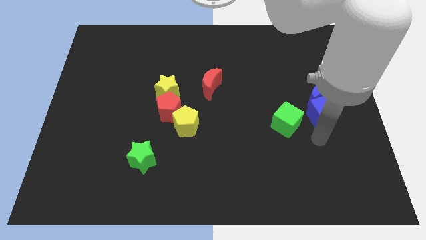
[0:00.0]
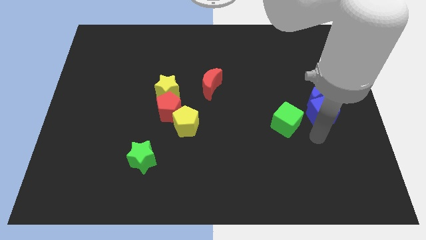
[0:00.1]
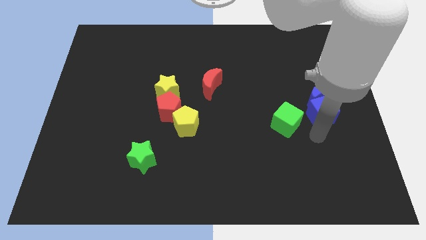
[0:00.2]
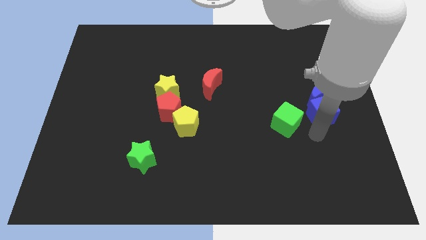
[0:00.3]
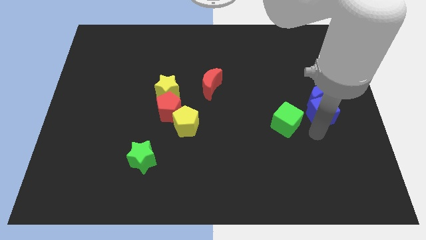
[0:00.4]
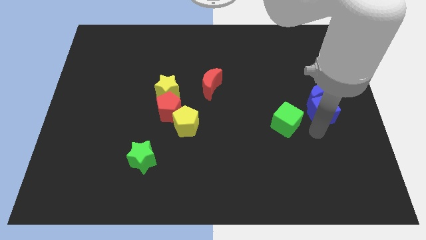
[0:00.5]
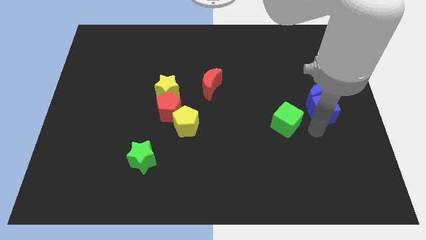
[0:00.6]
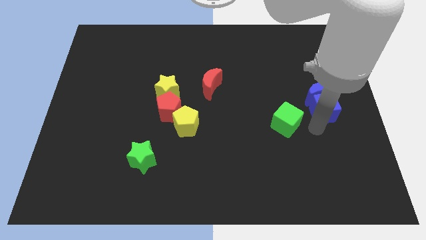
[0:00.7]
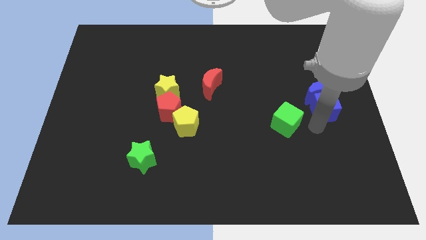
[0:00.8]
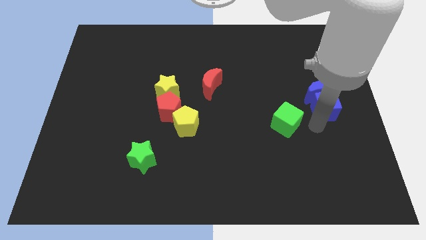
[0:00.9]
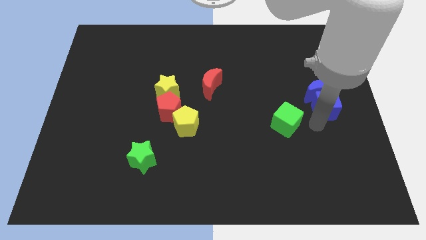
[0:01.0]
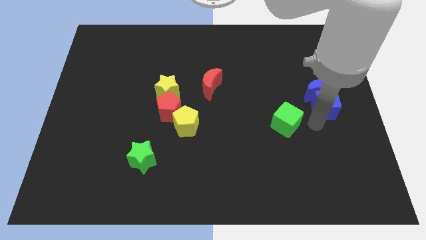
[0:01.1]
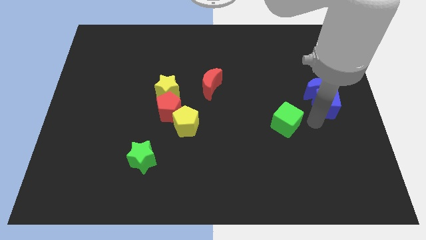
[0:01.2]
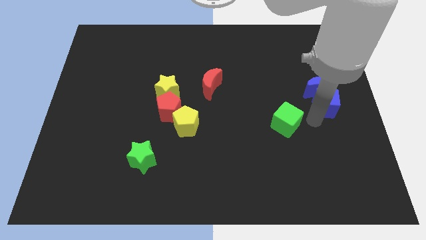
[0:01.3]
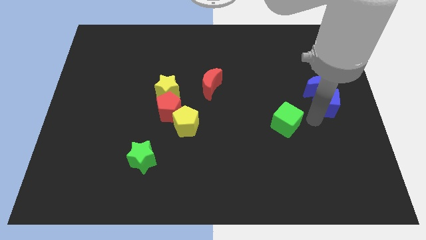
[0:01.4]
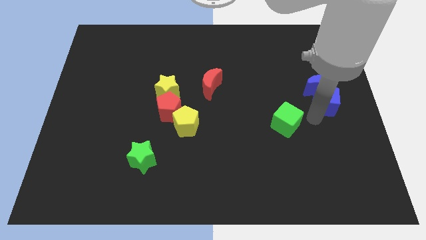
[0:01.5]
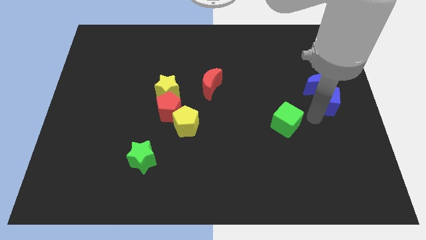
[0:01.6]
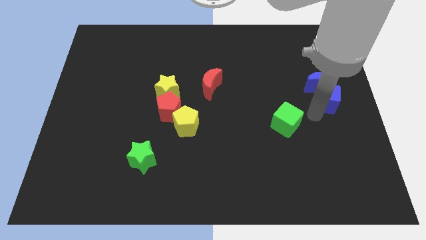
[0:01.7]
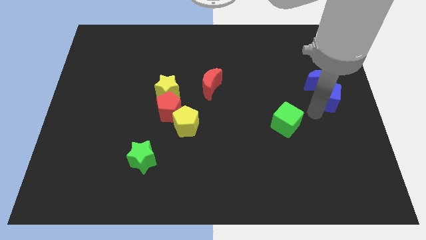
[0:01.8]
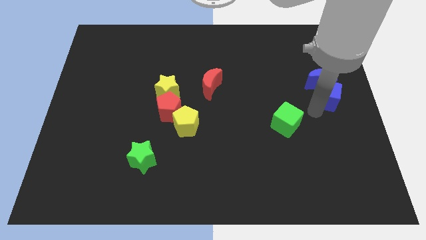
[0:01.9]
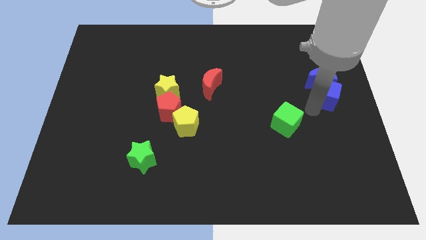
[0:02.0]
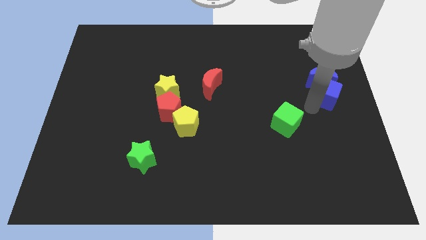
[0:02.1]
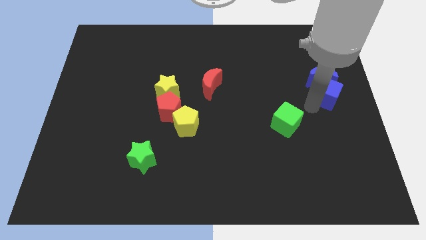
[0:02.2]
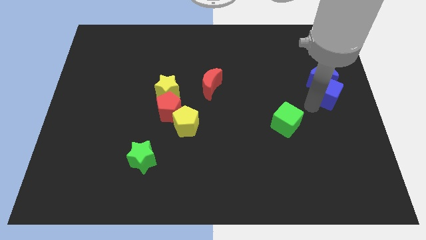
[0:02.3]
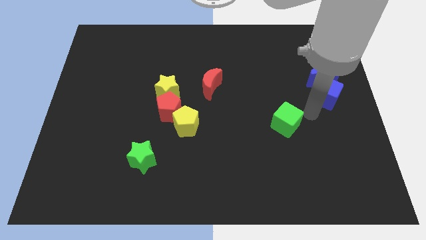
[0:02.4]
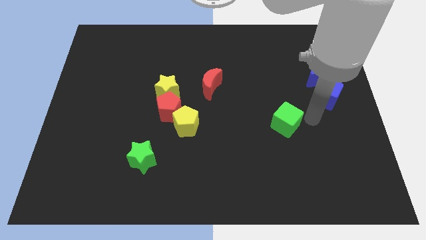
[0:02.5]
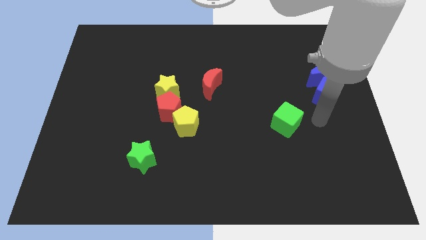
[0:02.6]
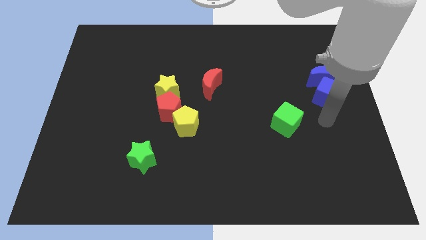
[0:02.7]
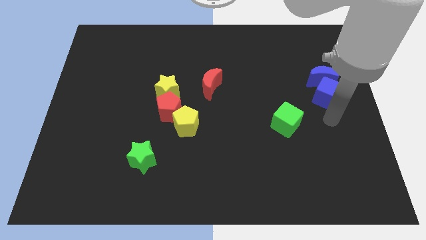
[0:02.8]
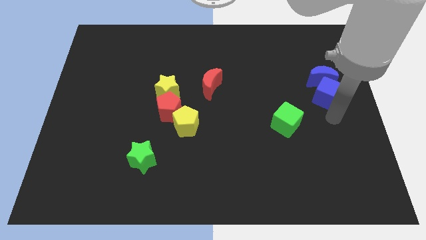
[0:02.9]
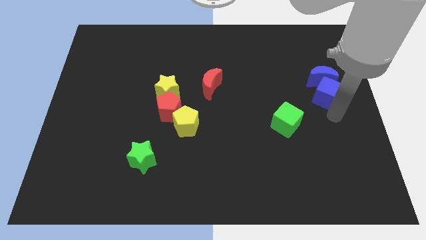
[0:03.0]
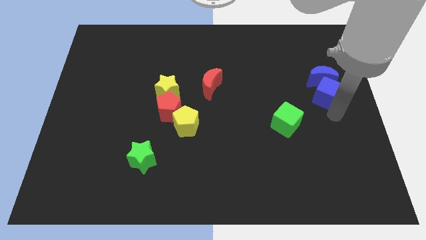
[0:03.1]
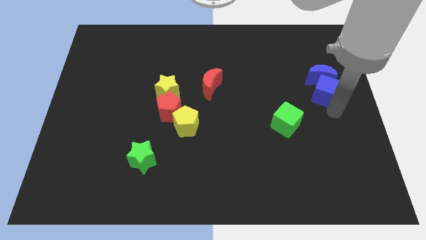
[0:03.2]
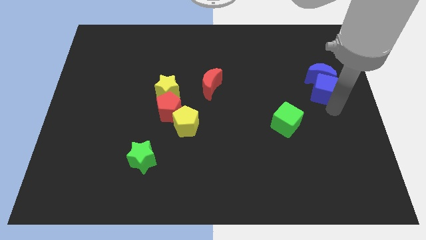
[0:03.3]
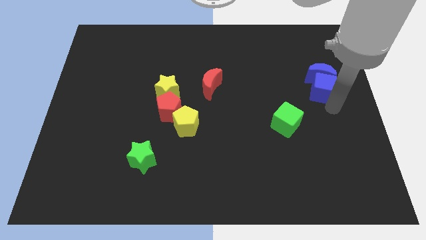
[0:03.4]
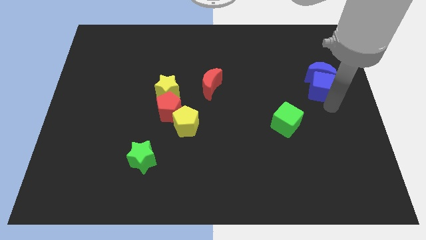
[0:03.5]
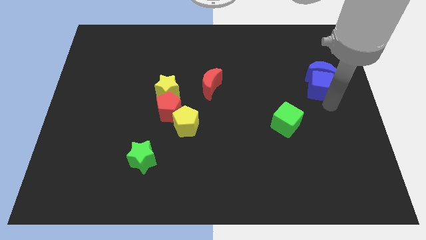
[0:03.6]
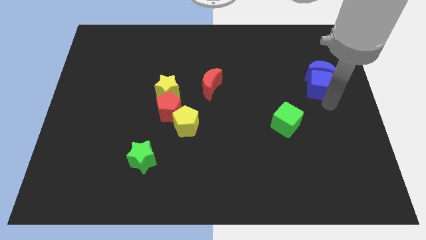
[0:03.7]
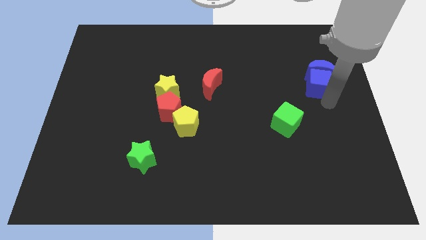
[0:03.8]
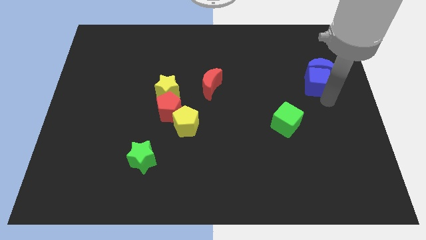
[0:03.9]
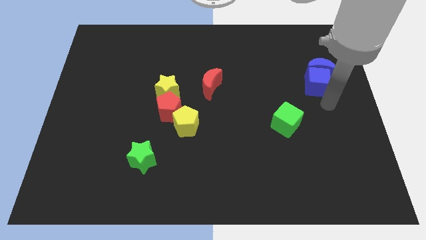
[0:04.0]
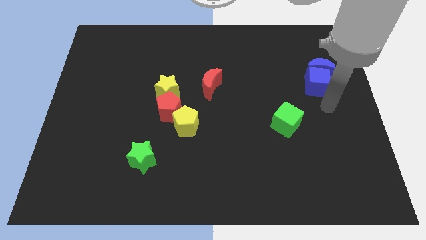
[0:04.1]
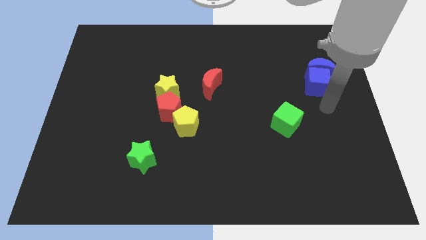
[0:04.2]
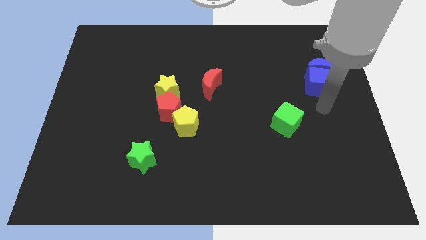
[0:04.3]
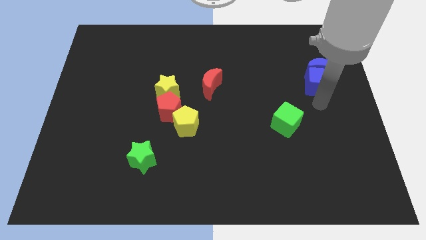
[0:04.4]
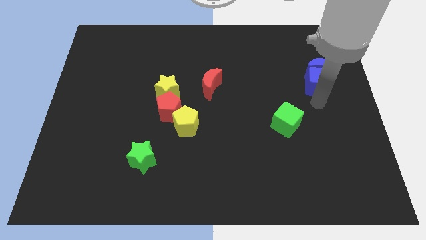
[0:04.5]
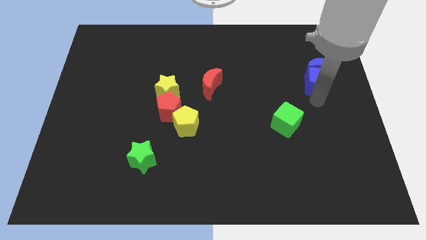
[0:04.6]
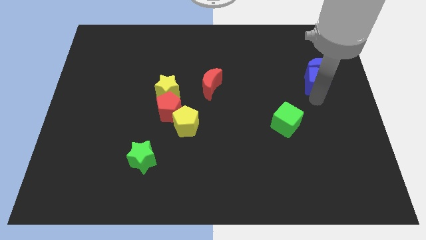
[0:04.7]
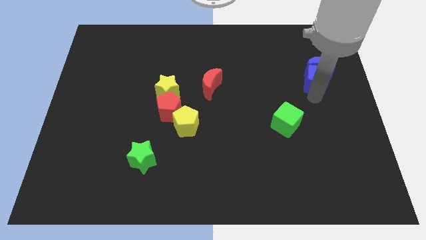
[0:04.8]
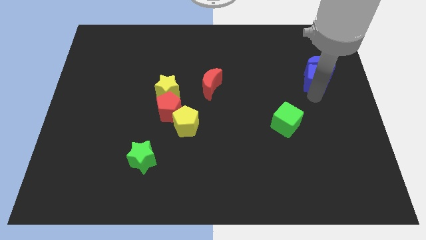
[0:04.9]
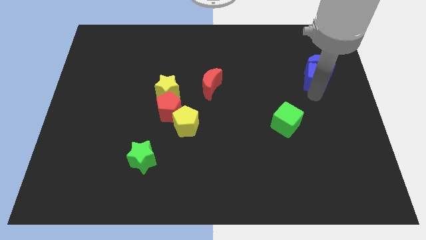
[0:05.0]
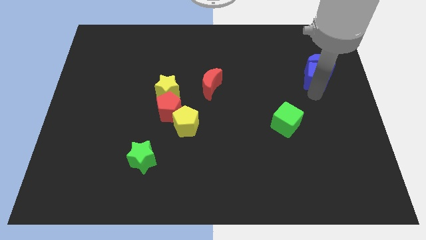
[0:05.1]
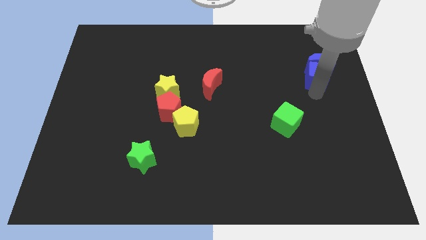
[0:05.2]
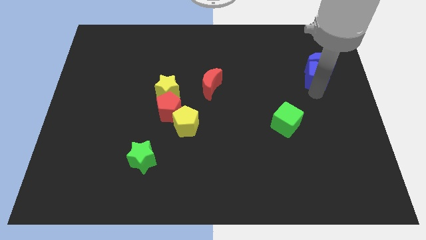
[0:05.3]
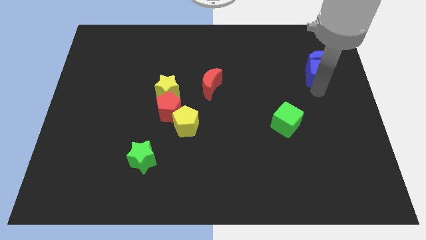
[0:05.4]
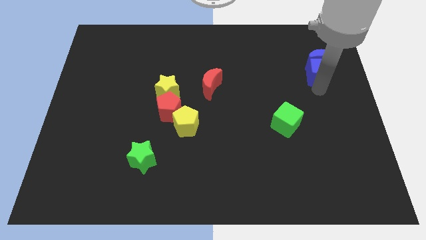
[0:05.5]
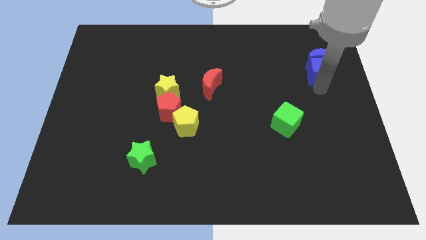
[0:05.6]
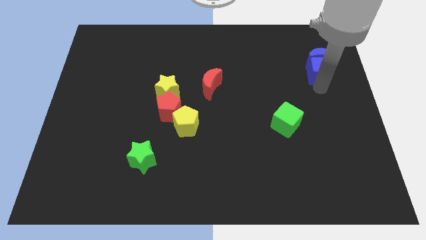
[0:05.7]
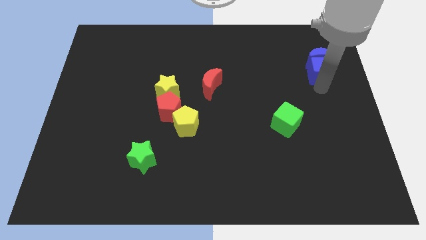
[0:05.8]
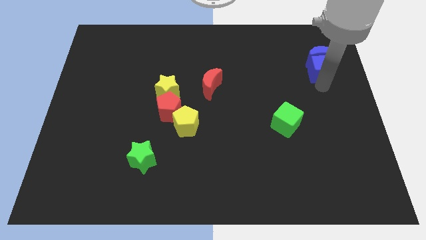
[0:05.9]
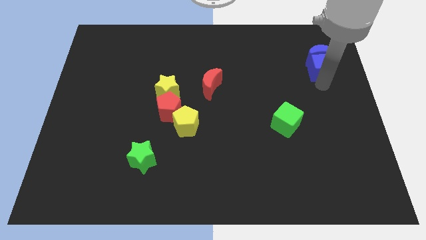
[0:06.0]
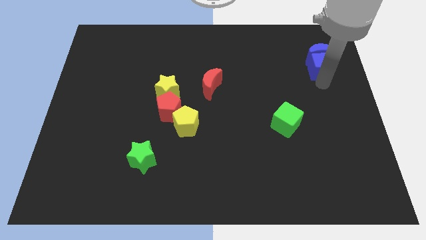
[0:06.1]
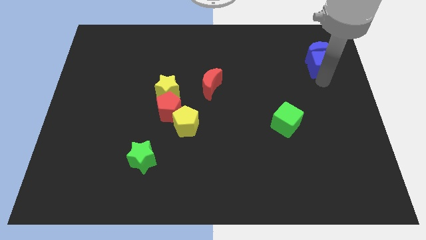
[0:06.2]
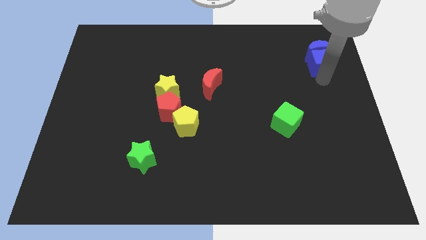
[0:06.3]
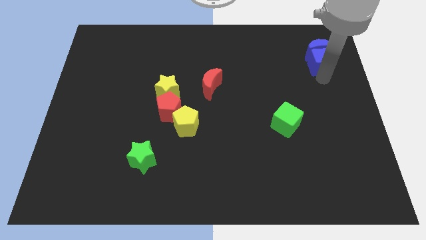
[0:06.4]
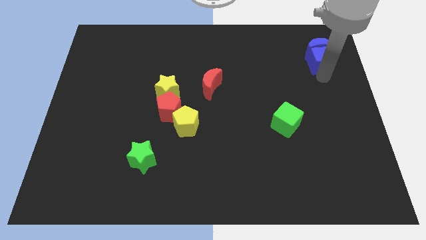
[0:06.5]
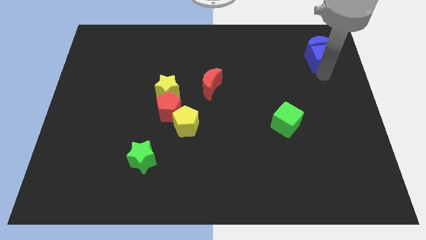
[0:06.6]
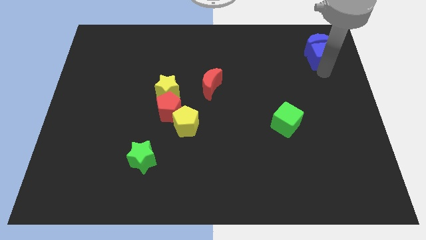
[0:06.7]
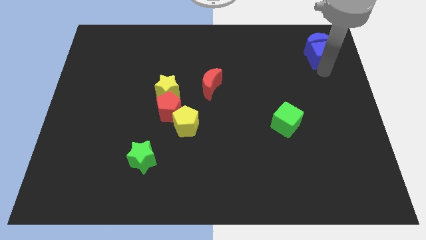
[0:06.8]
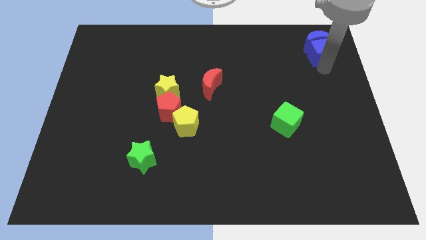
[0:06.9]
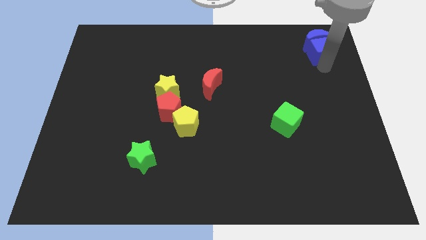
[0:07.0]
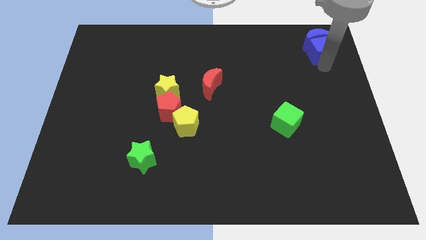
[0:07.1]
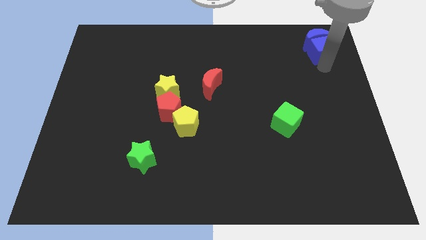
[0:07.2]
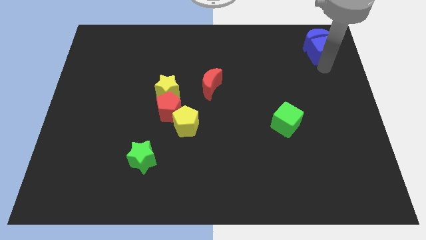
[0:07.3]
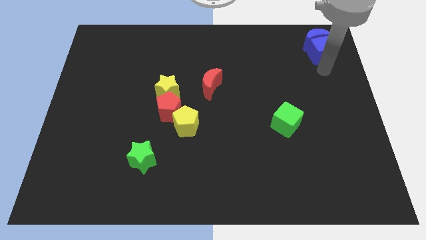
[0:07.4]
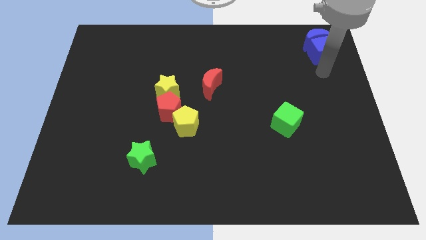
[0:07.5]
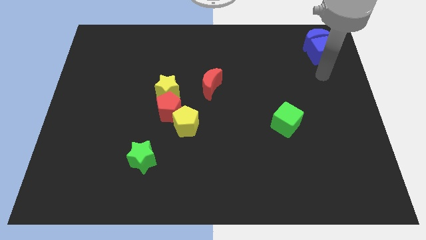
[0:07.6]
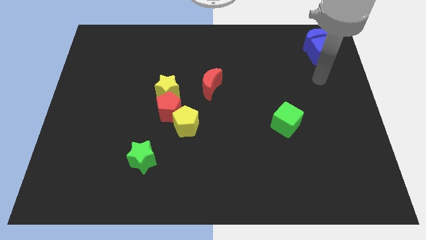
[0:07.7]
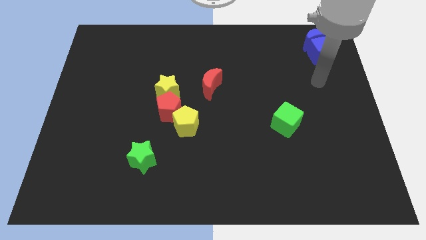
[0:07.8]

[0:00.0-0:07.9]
push the blue blocks to the top right corner of the board

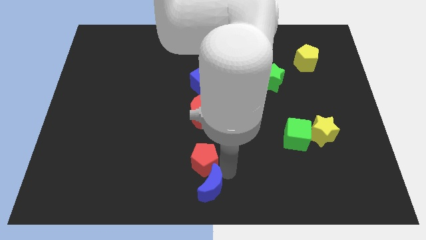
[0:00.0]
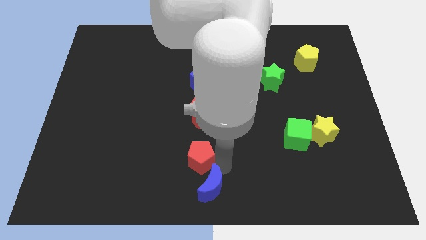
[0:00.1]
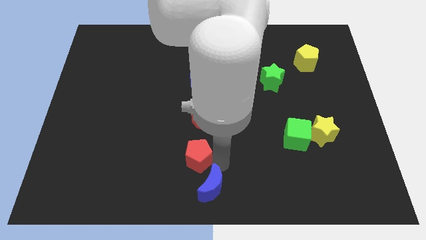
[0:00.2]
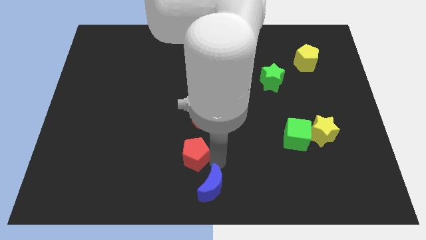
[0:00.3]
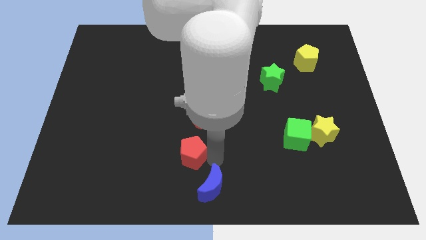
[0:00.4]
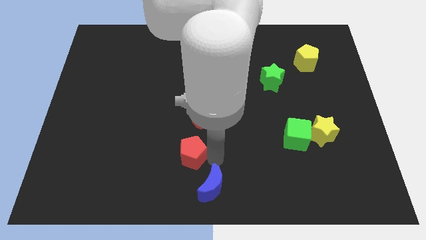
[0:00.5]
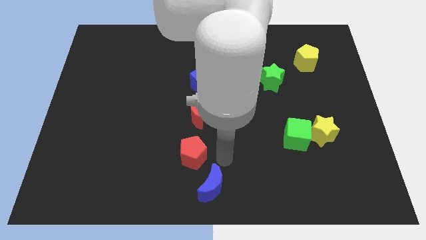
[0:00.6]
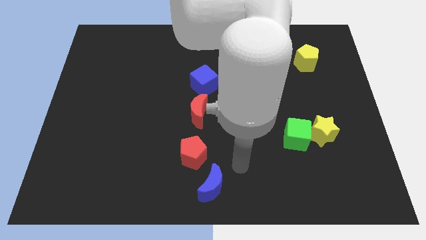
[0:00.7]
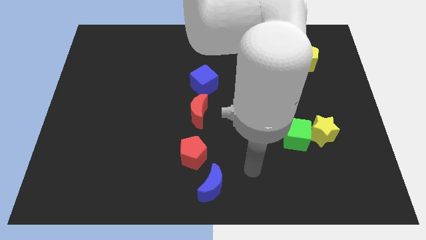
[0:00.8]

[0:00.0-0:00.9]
move the red pentagon slightly to the bottom of the red crescent

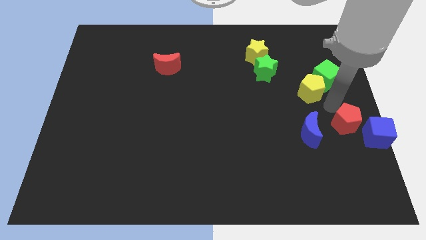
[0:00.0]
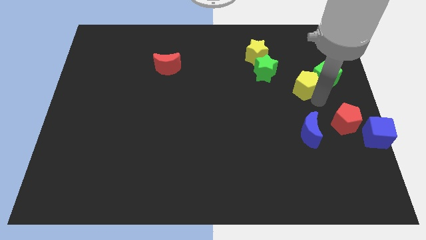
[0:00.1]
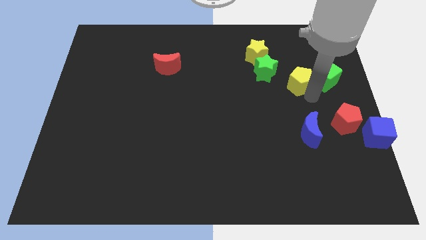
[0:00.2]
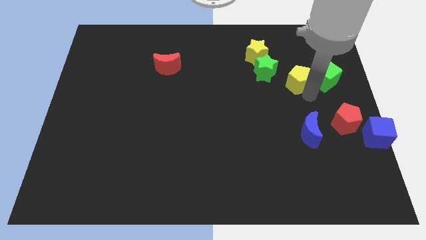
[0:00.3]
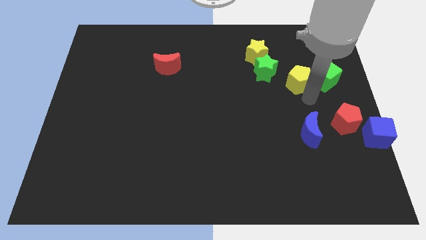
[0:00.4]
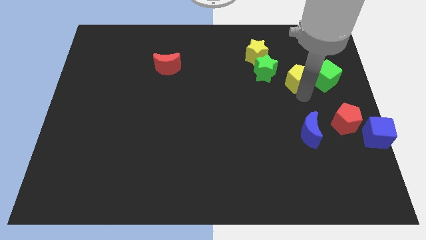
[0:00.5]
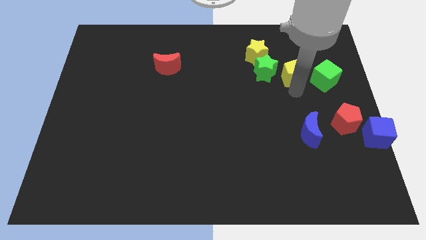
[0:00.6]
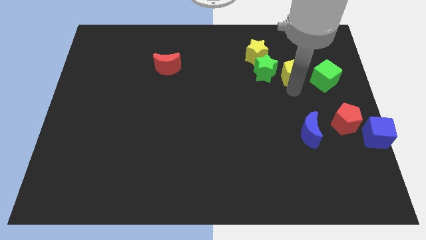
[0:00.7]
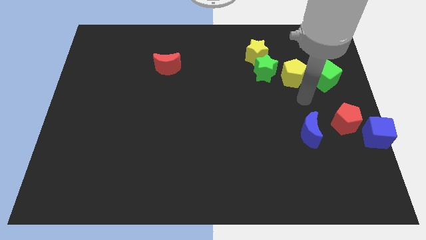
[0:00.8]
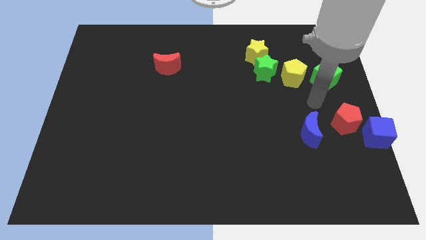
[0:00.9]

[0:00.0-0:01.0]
move the yellow pentagon to the right of the green star
